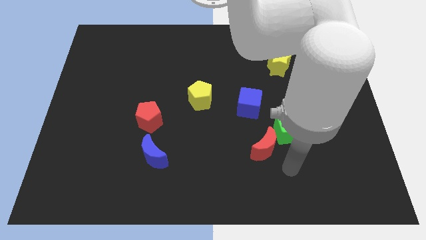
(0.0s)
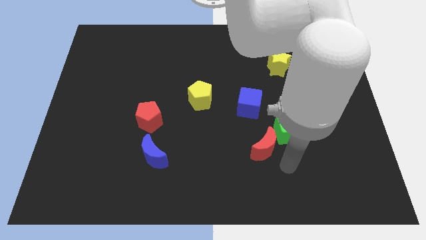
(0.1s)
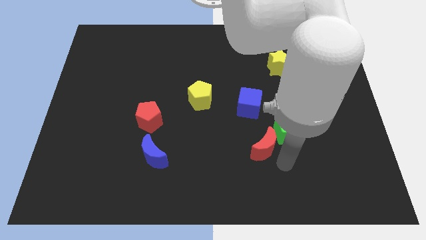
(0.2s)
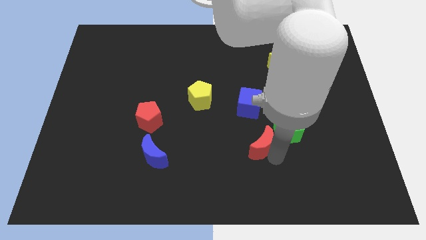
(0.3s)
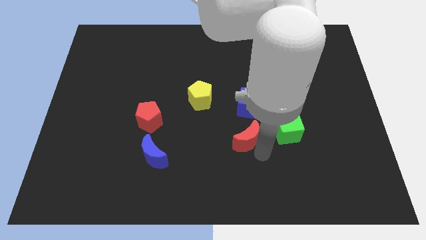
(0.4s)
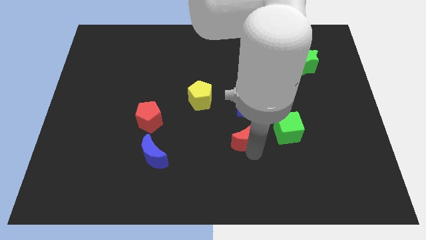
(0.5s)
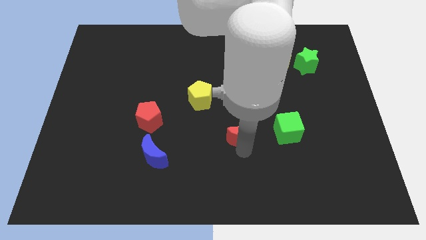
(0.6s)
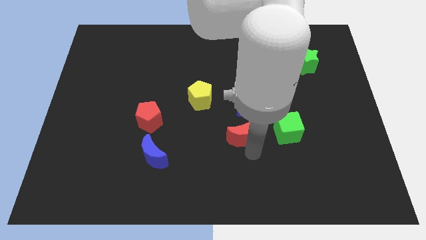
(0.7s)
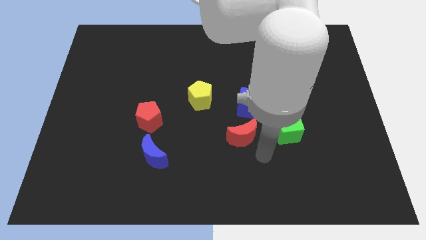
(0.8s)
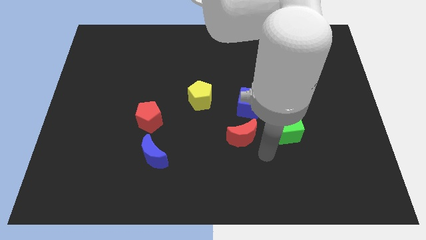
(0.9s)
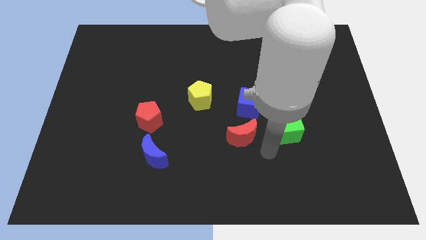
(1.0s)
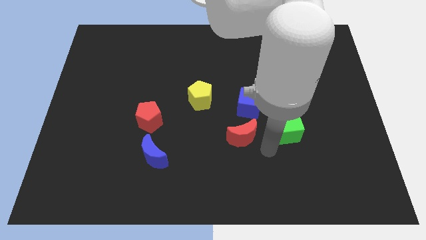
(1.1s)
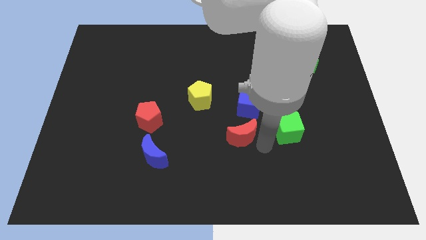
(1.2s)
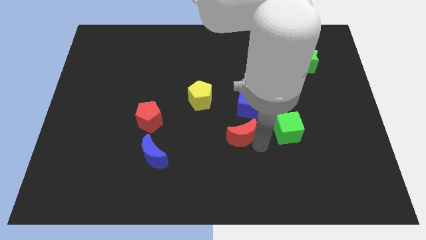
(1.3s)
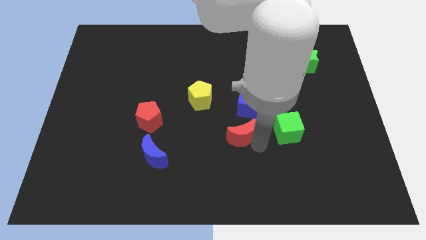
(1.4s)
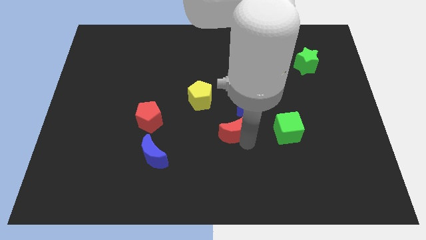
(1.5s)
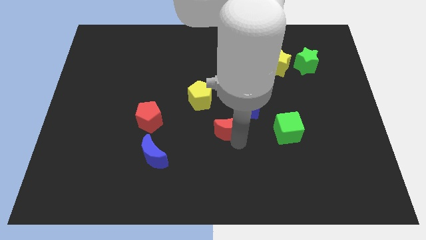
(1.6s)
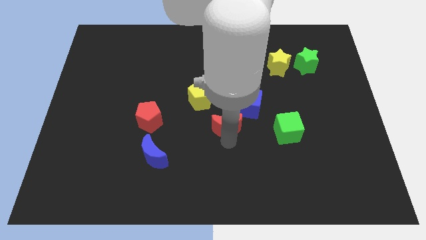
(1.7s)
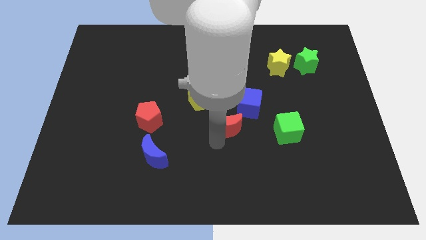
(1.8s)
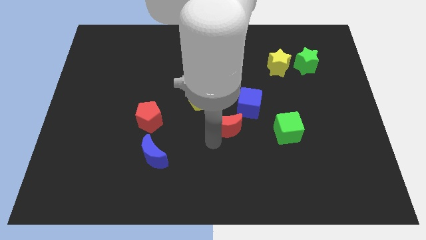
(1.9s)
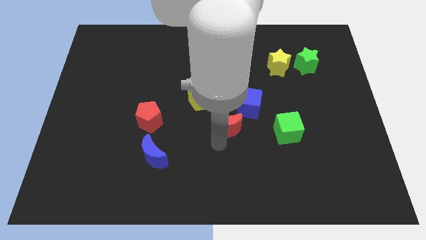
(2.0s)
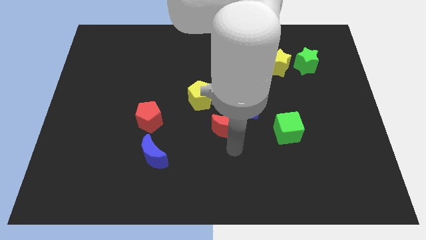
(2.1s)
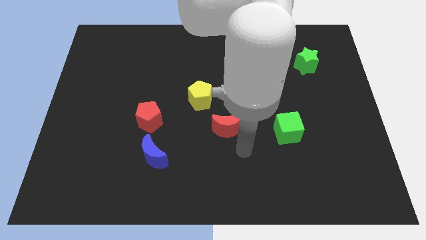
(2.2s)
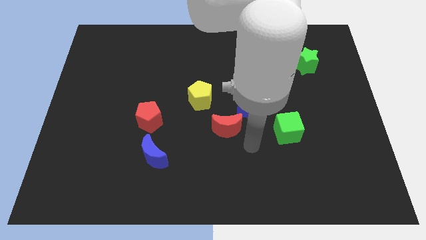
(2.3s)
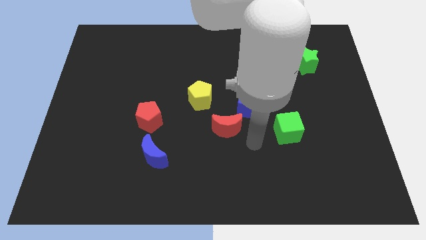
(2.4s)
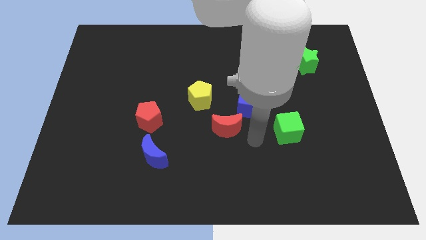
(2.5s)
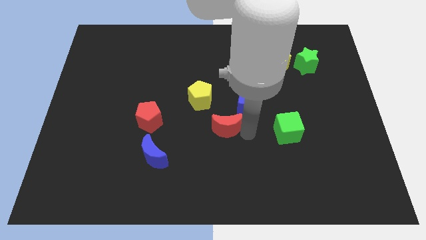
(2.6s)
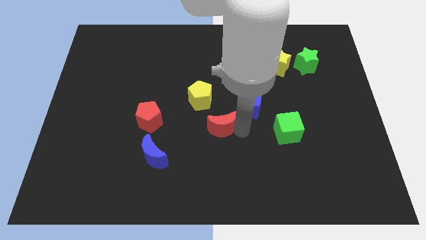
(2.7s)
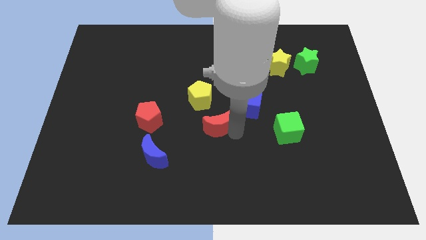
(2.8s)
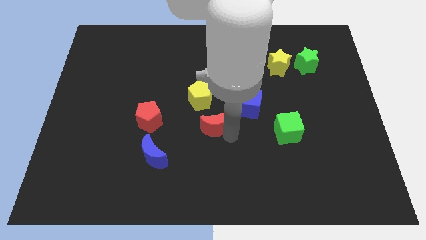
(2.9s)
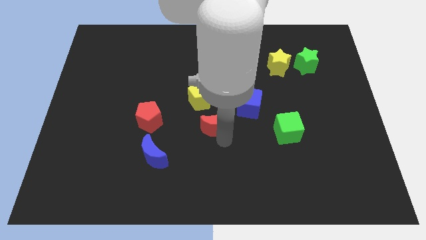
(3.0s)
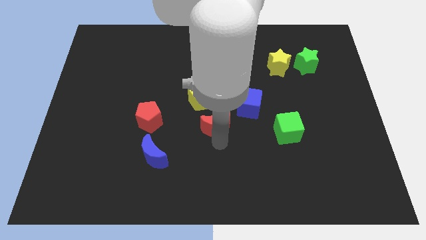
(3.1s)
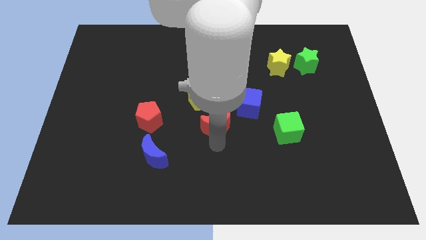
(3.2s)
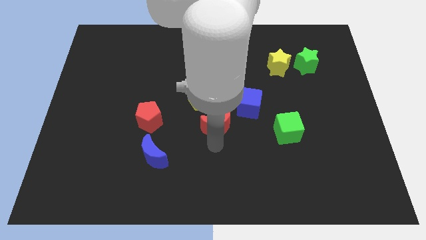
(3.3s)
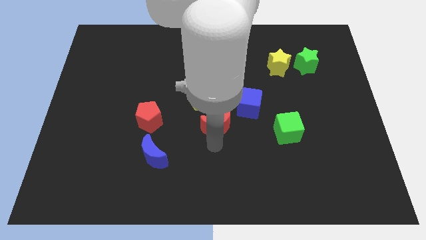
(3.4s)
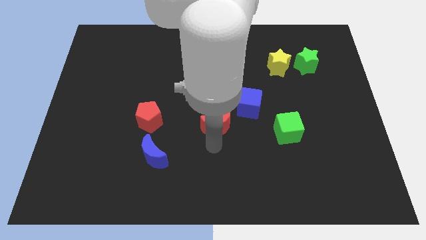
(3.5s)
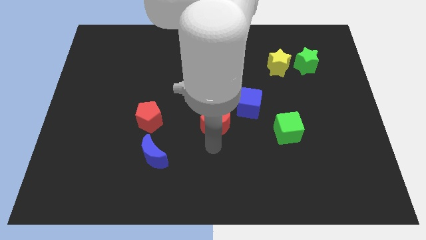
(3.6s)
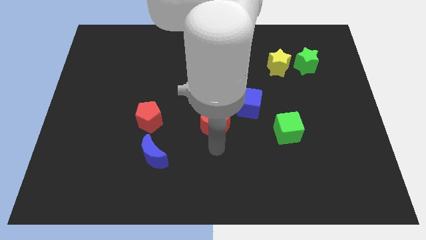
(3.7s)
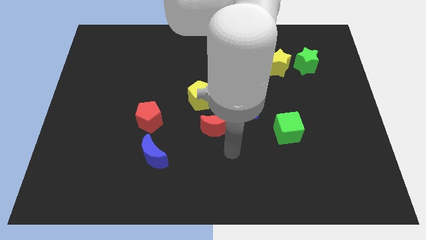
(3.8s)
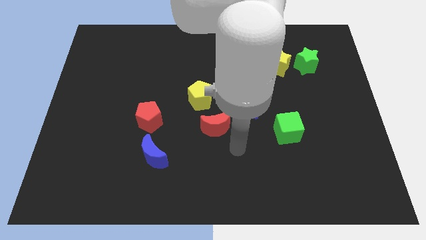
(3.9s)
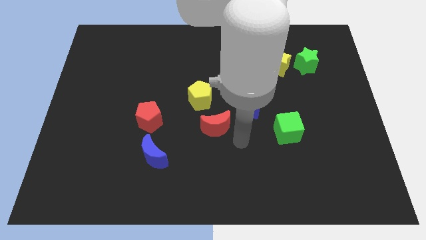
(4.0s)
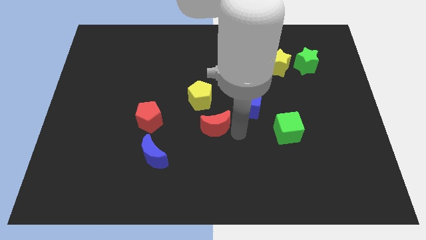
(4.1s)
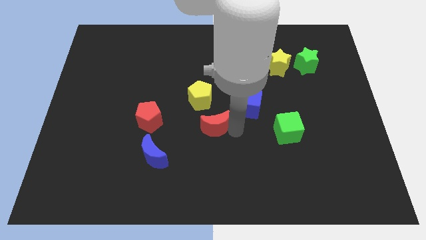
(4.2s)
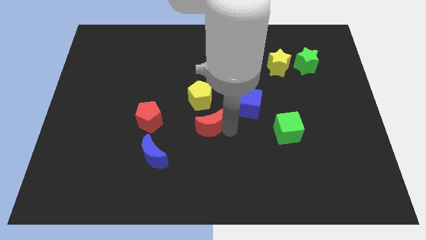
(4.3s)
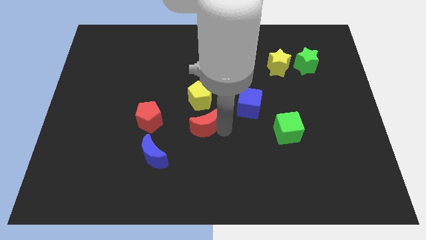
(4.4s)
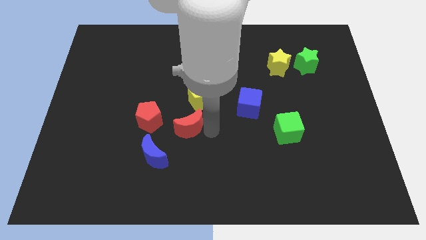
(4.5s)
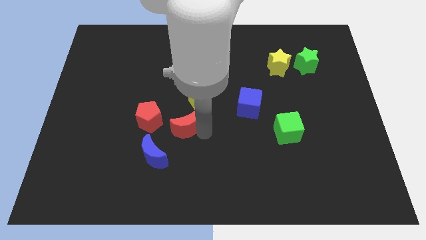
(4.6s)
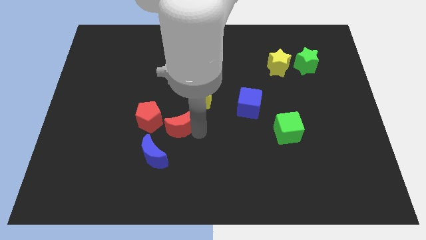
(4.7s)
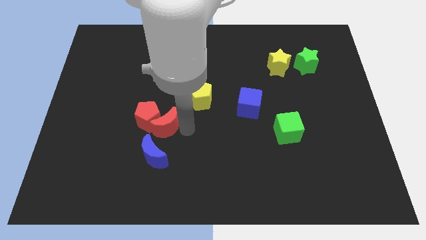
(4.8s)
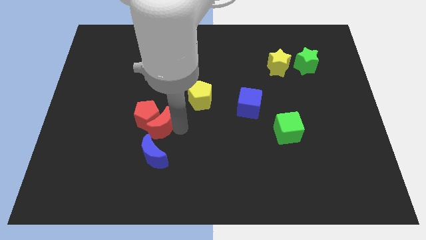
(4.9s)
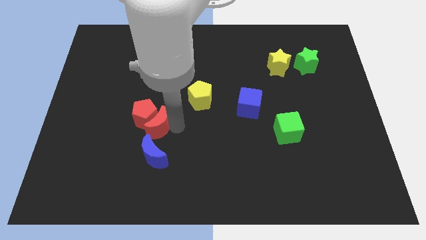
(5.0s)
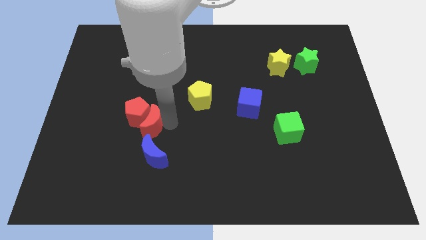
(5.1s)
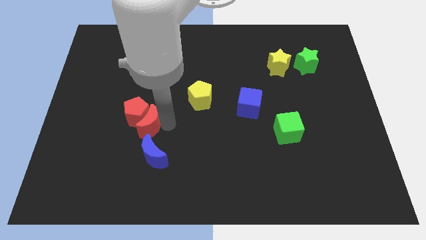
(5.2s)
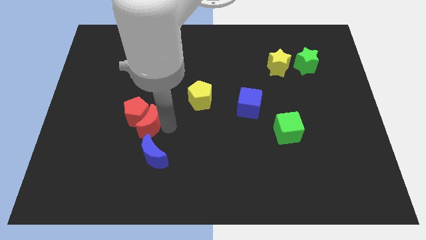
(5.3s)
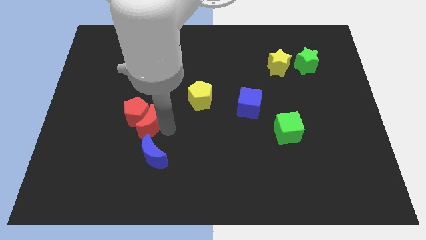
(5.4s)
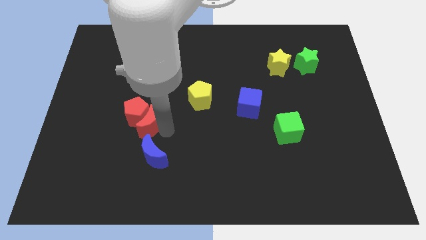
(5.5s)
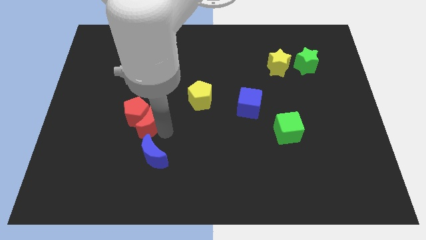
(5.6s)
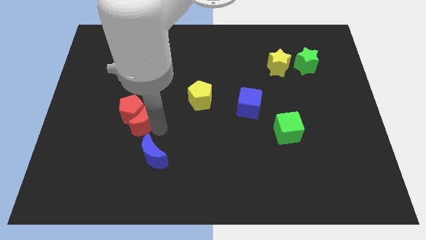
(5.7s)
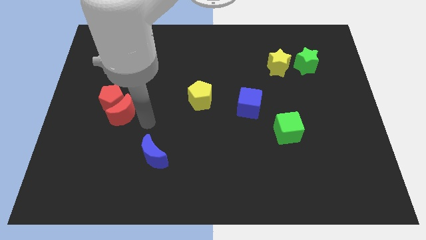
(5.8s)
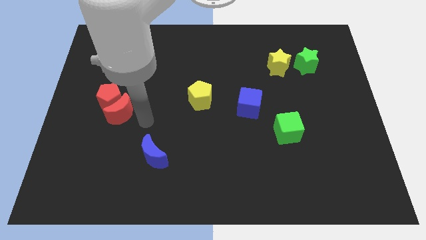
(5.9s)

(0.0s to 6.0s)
place red pentagon left to the yellow pentagon

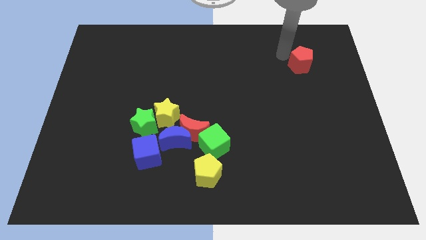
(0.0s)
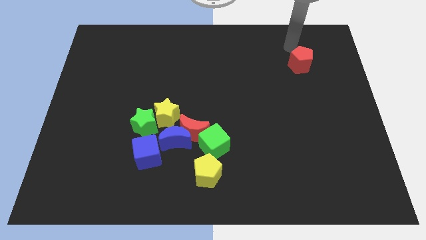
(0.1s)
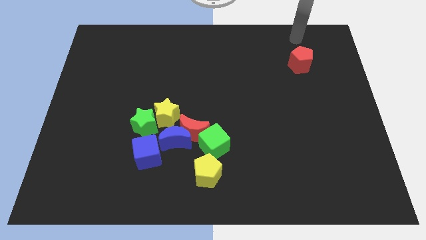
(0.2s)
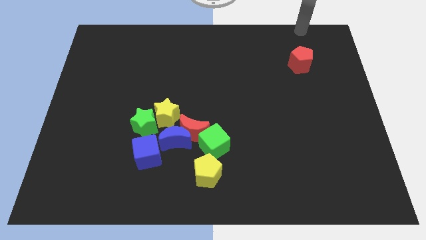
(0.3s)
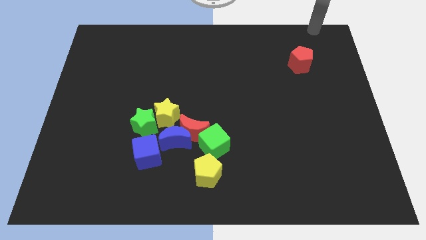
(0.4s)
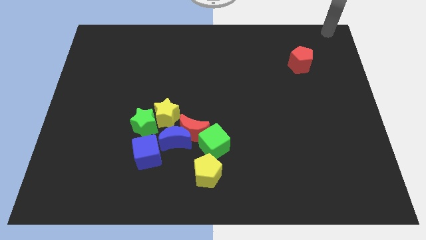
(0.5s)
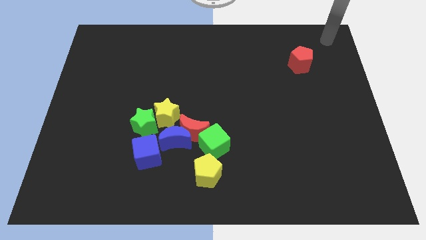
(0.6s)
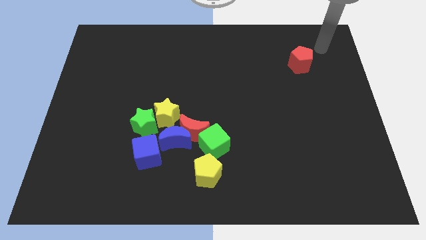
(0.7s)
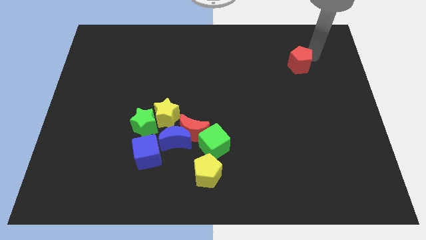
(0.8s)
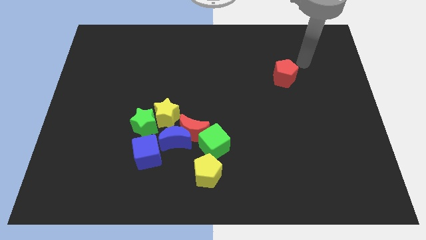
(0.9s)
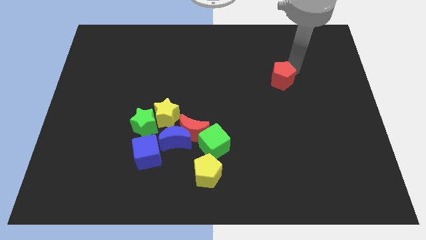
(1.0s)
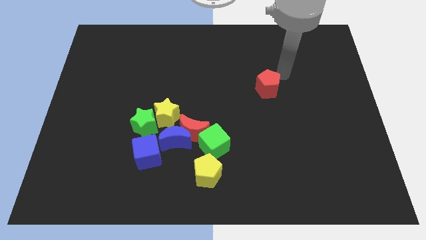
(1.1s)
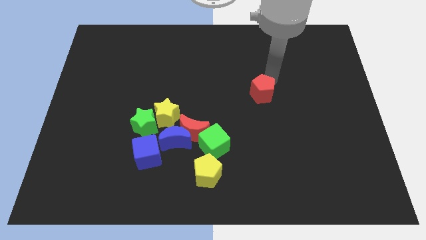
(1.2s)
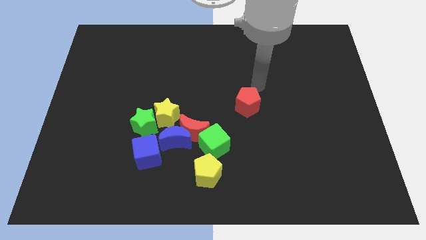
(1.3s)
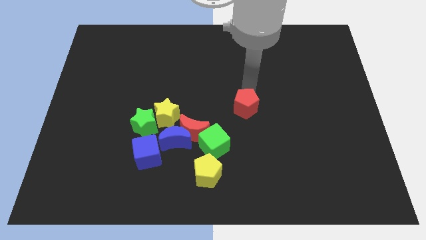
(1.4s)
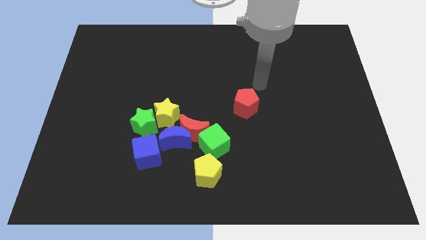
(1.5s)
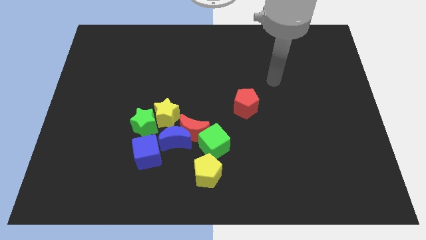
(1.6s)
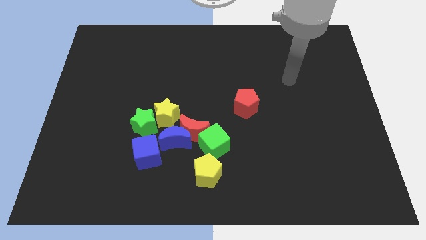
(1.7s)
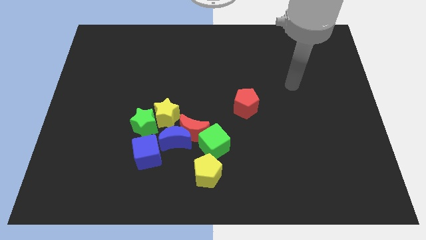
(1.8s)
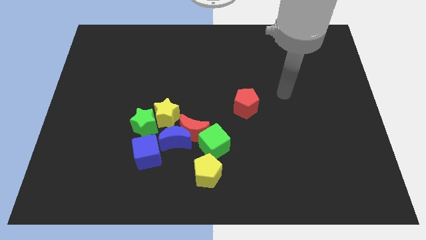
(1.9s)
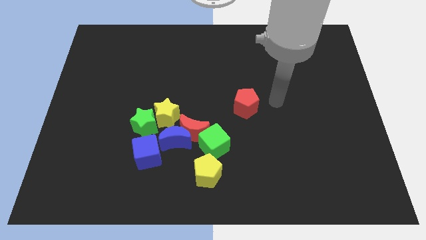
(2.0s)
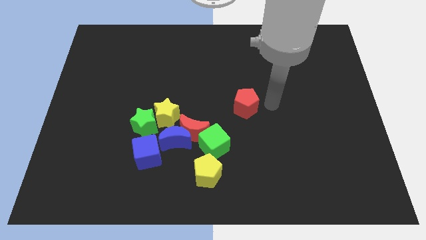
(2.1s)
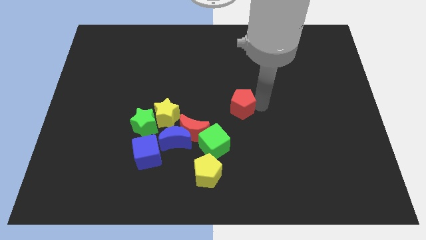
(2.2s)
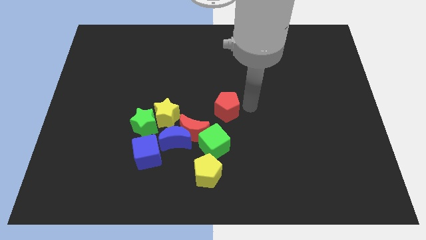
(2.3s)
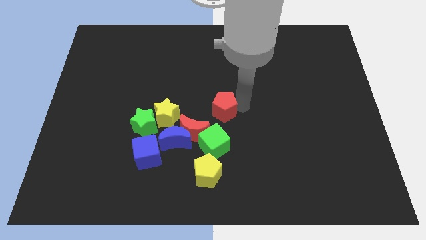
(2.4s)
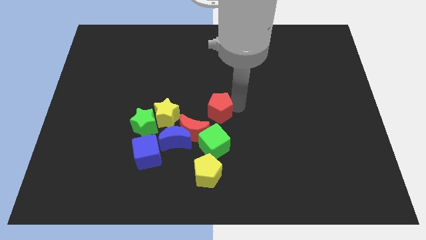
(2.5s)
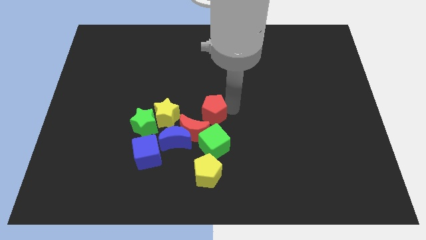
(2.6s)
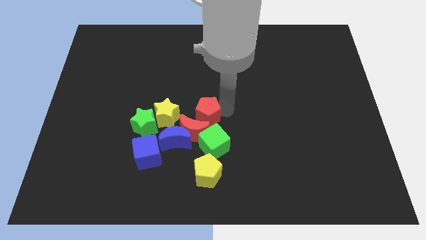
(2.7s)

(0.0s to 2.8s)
place the red pentagon above the green cube

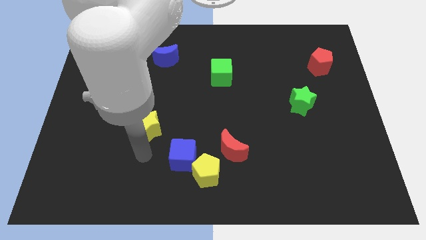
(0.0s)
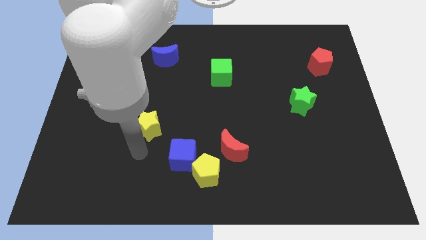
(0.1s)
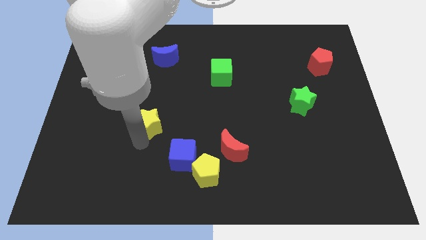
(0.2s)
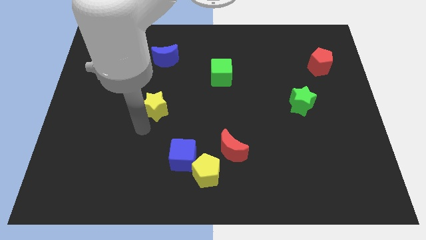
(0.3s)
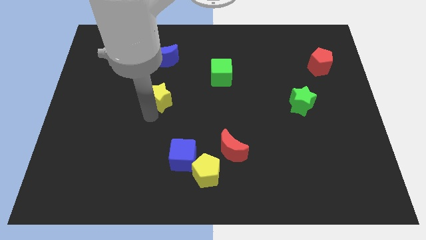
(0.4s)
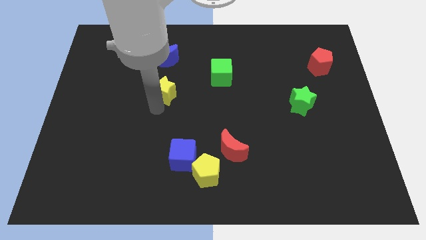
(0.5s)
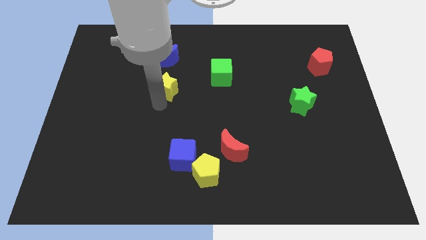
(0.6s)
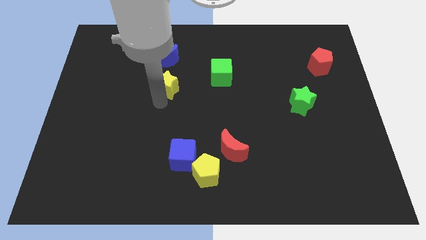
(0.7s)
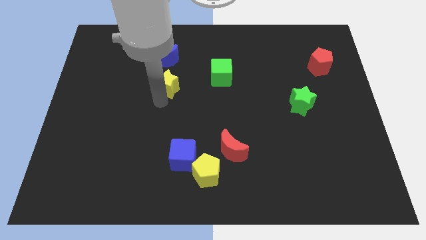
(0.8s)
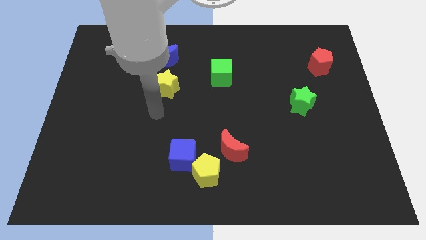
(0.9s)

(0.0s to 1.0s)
place the yellow star below the blue moon
